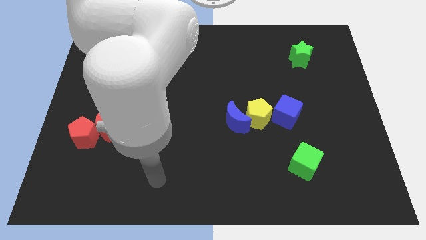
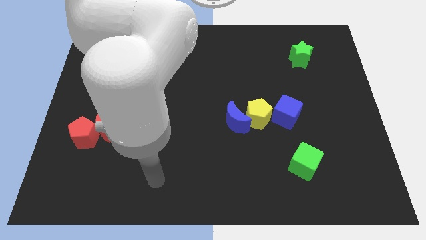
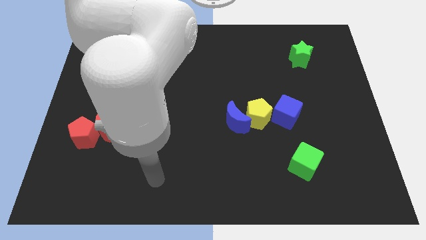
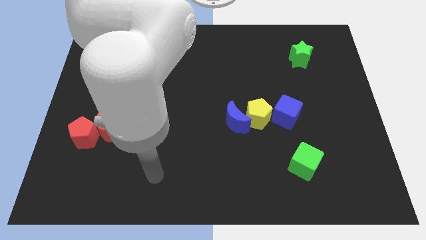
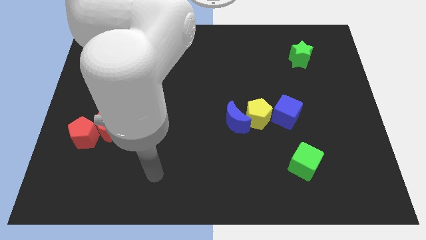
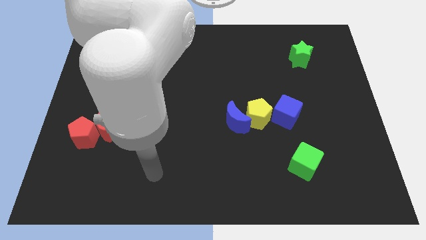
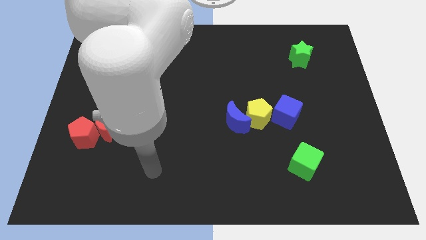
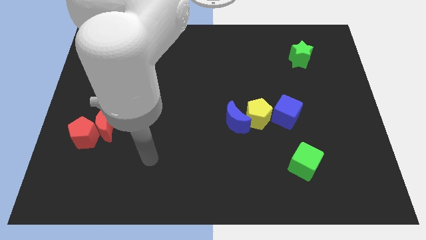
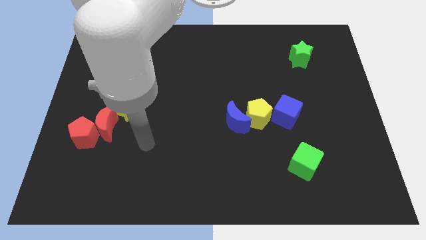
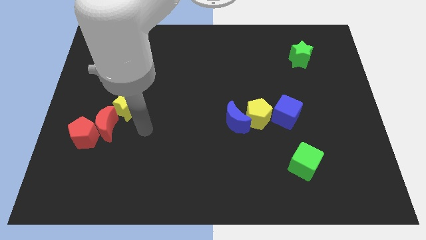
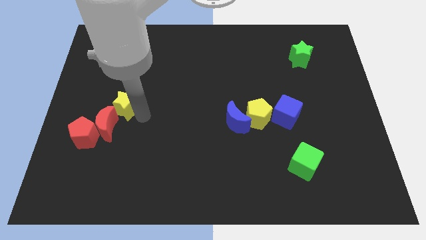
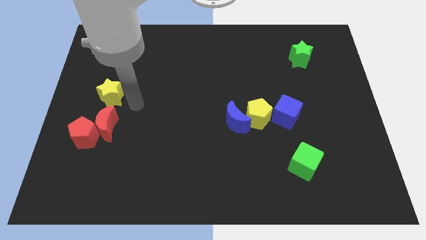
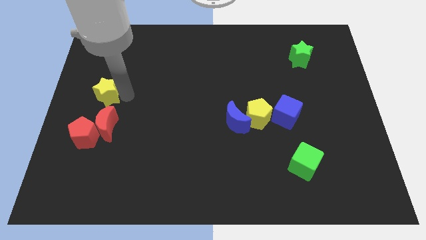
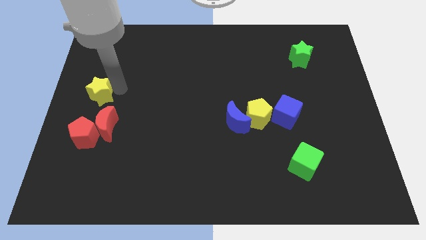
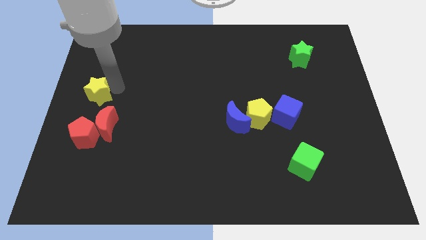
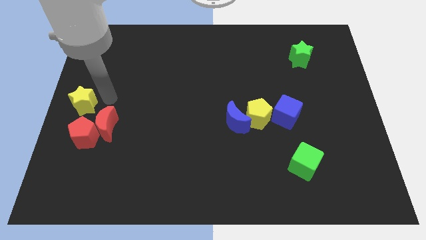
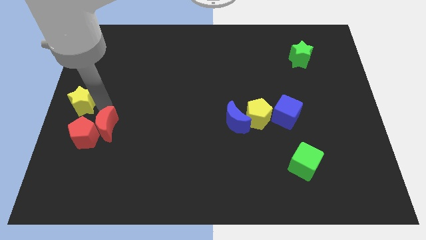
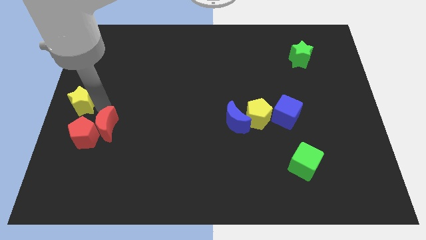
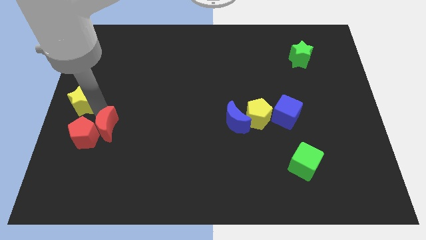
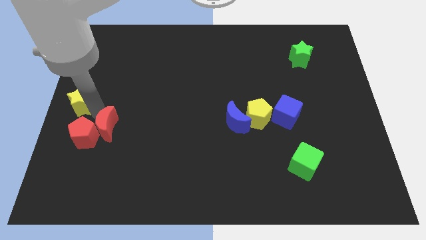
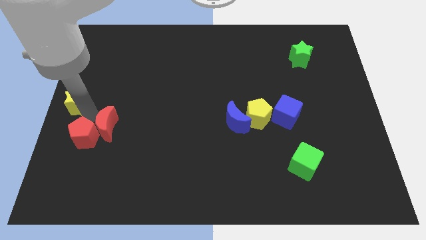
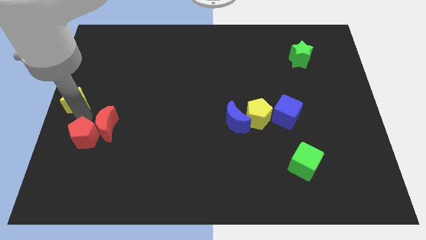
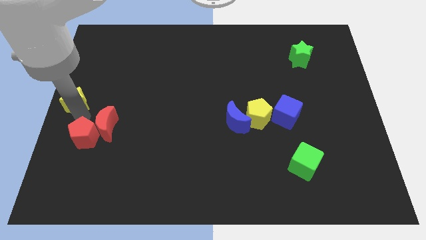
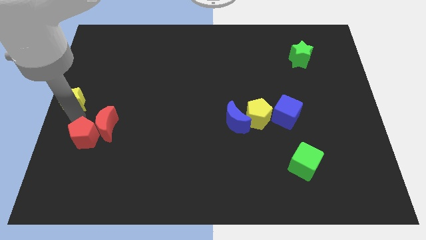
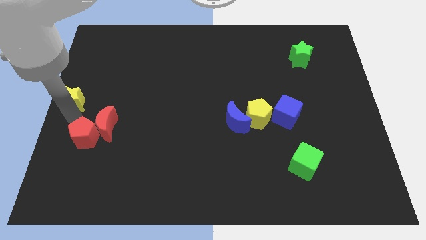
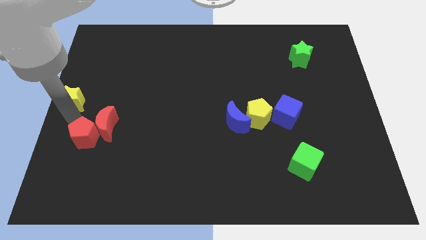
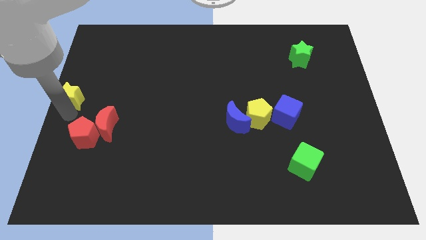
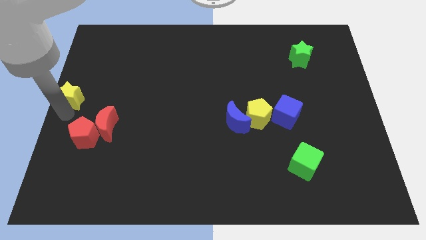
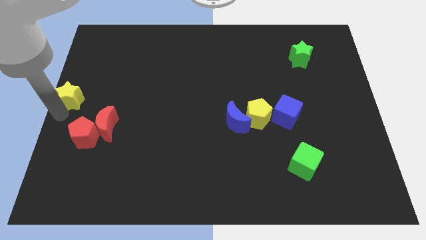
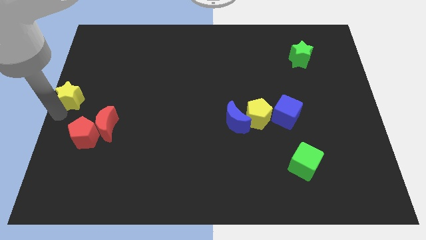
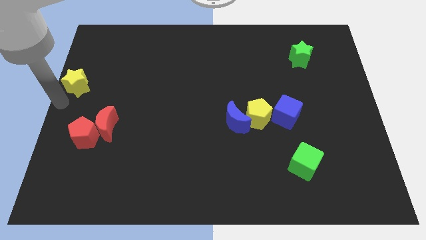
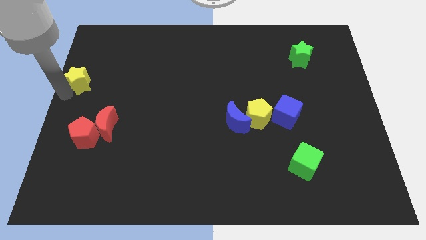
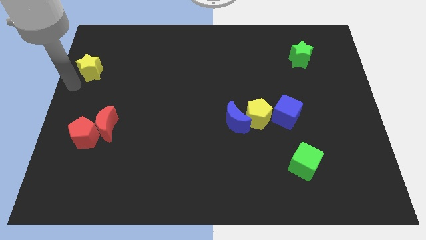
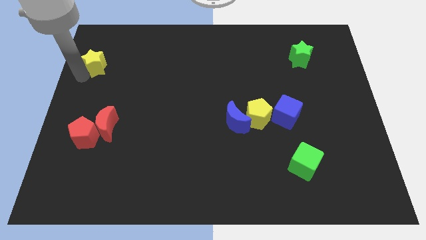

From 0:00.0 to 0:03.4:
place the yellow star above the red pentagon

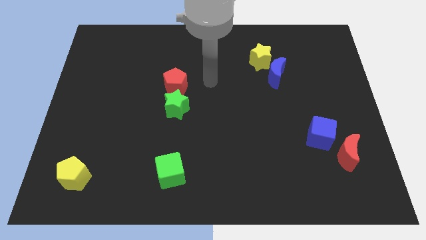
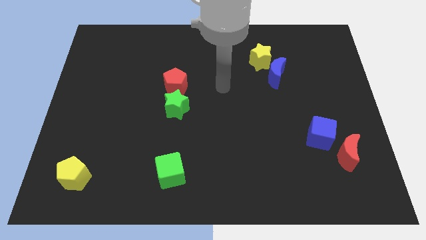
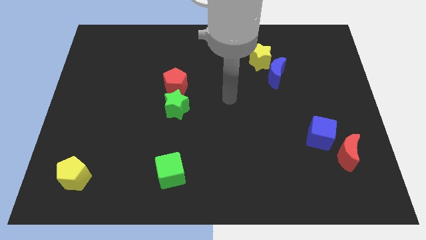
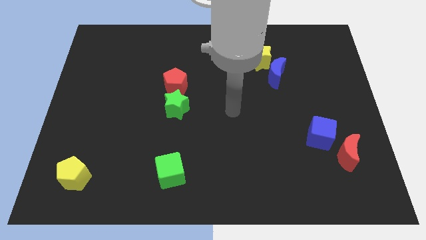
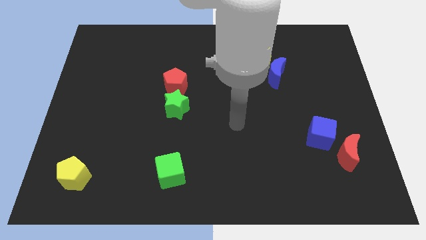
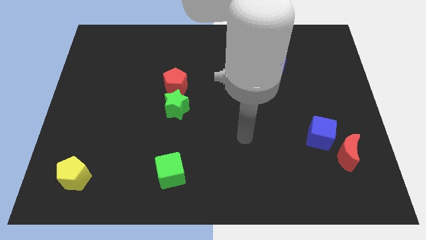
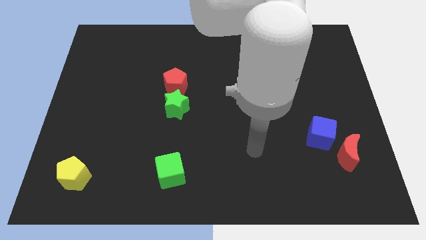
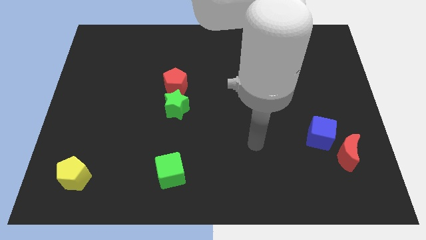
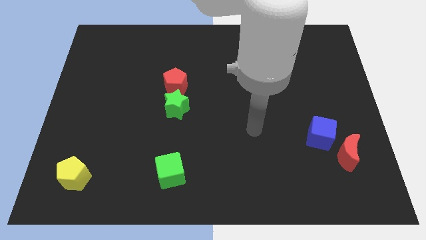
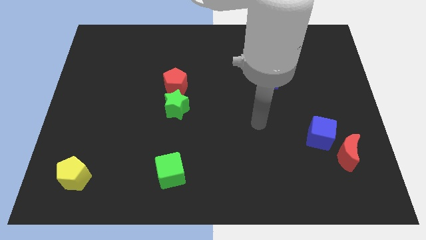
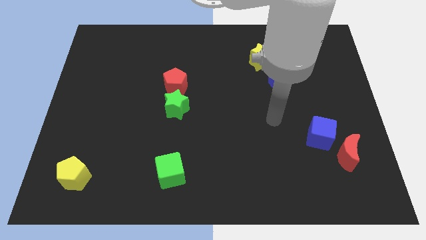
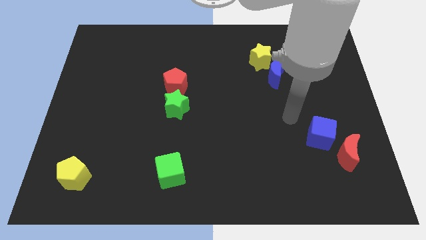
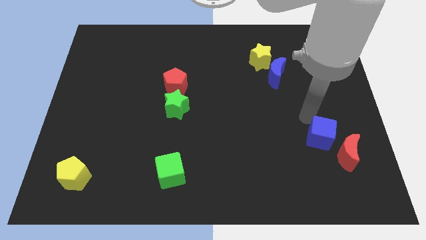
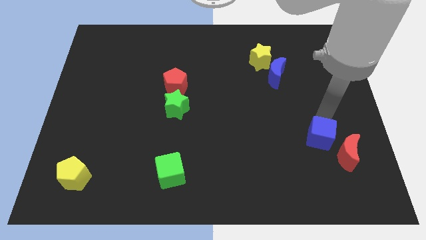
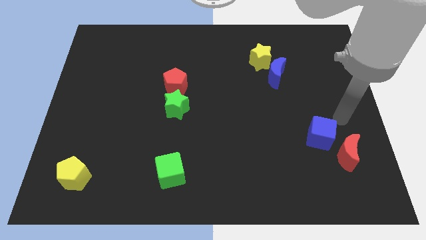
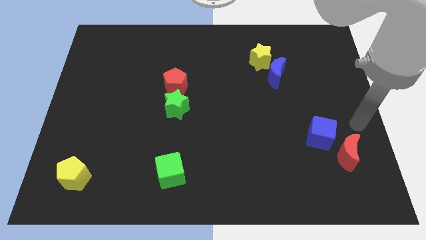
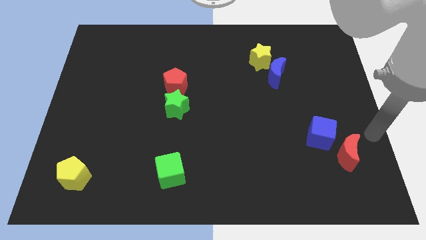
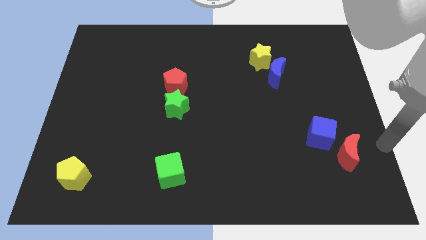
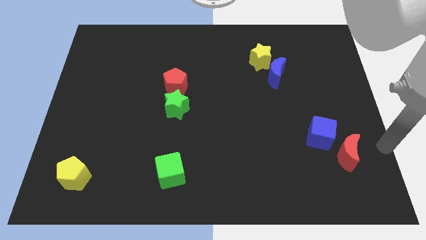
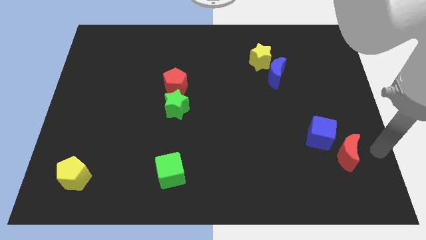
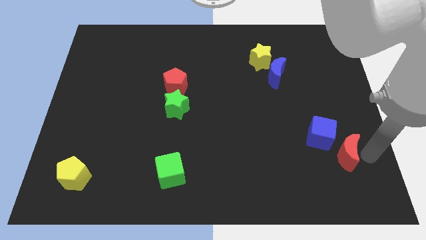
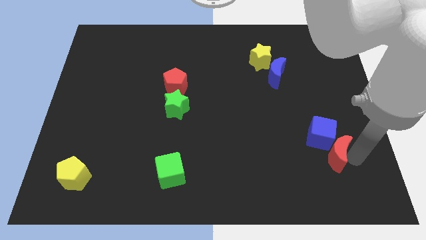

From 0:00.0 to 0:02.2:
move your arm and point to the right of red moon

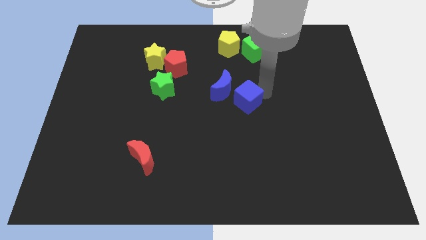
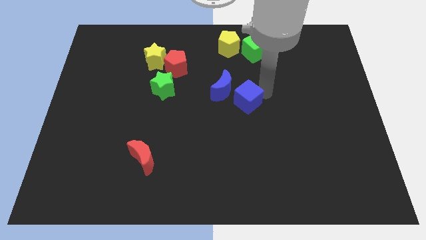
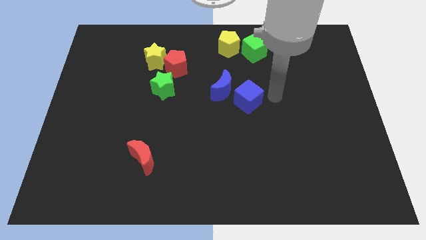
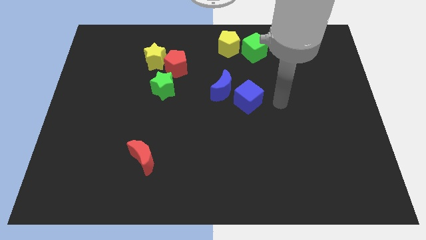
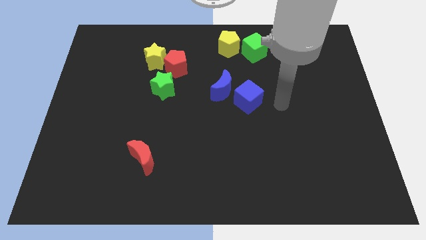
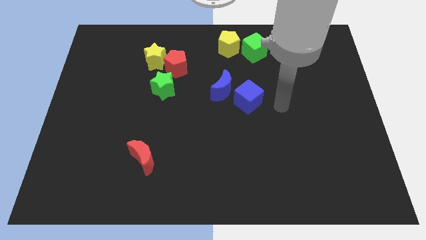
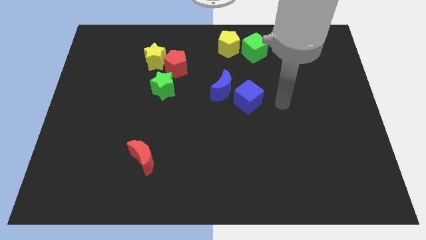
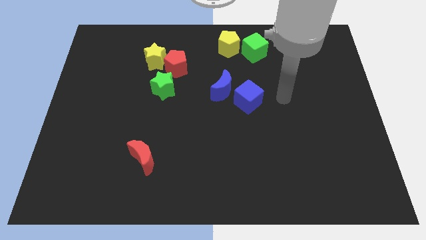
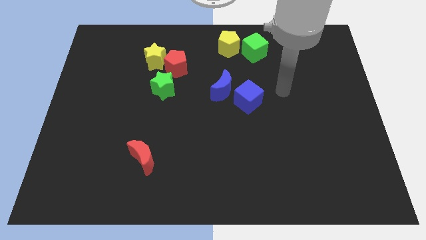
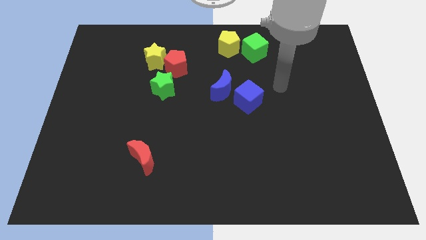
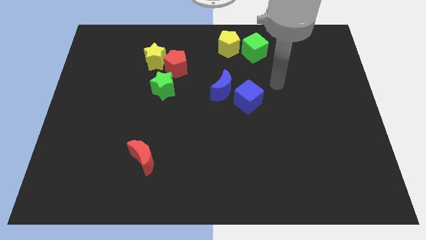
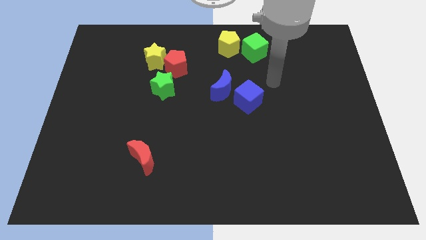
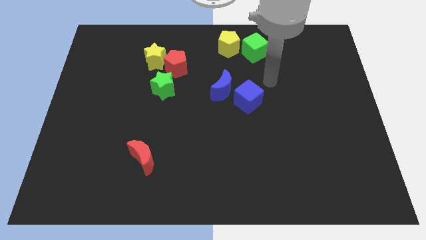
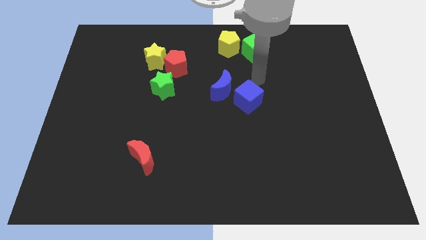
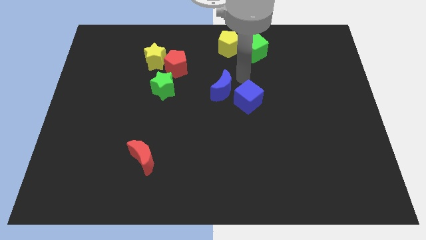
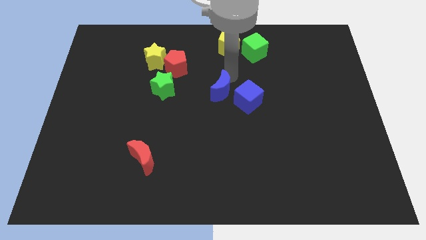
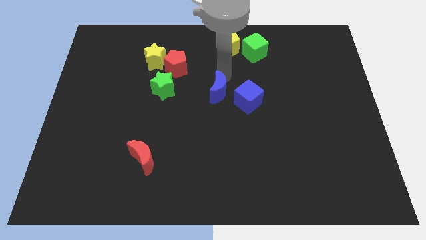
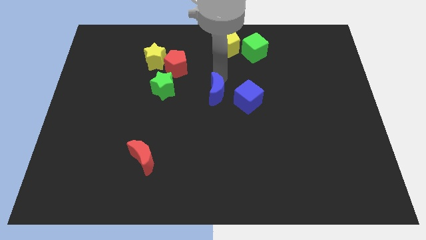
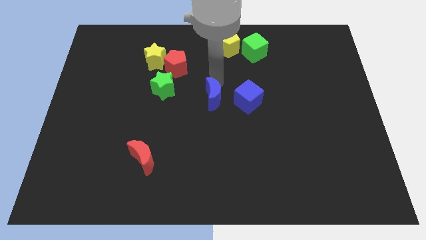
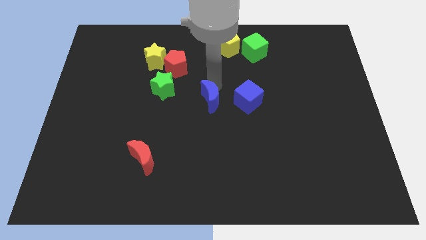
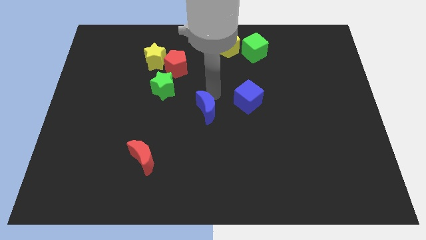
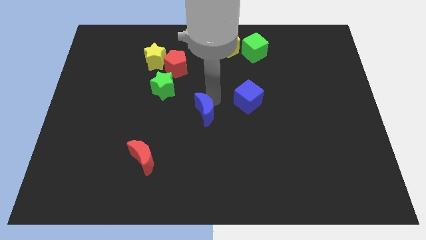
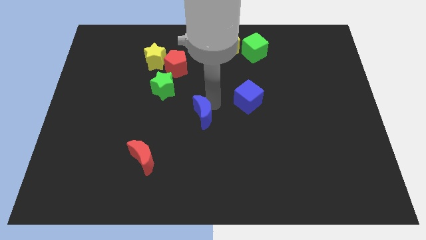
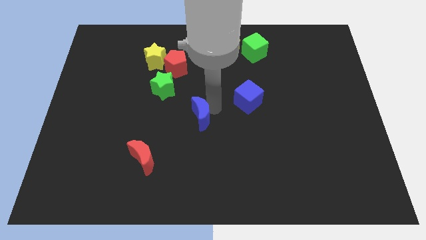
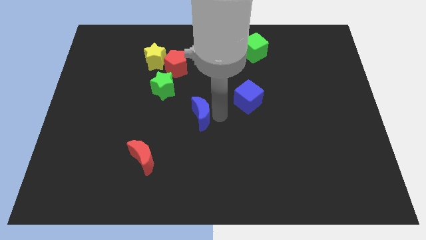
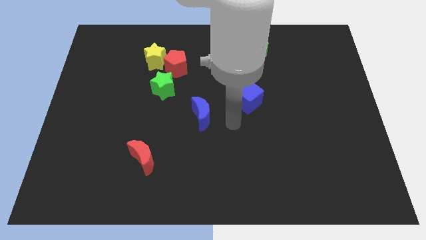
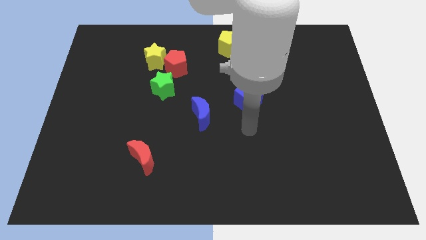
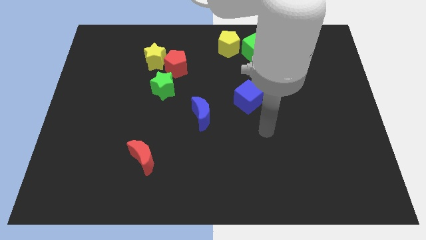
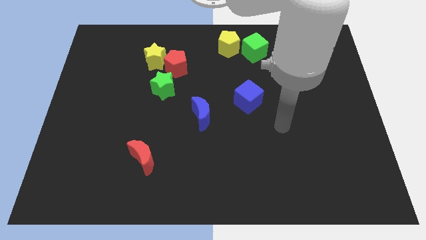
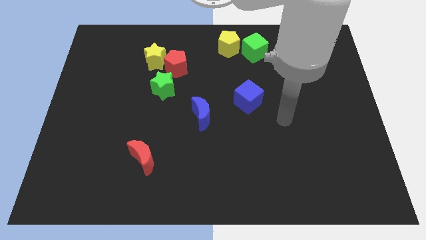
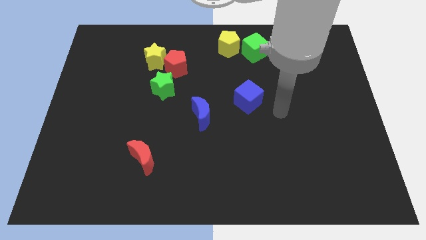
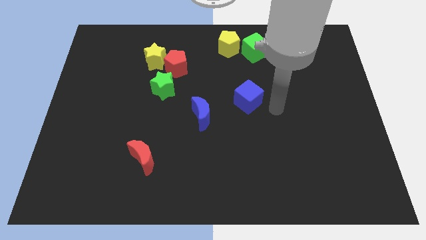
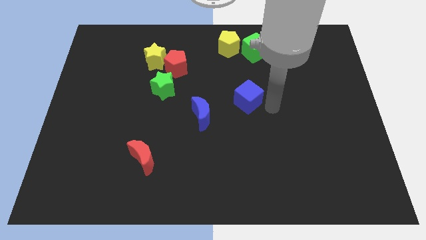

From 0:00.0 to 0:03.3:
move the blue crescent to the bottom left of the blue cube

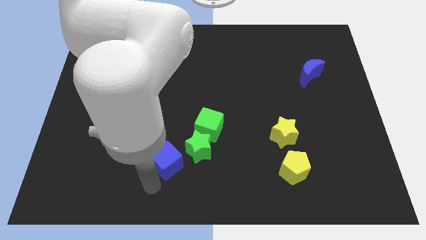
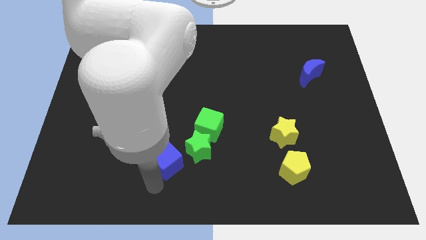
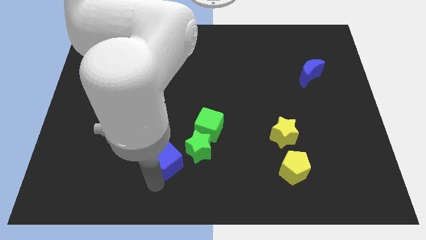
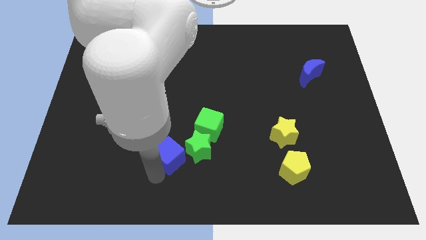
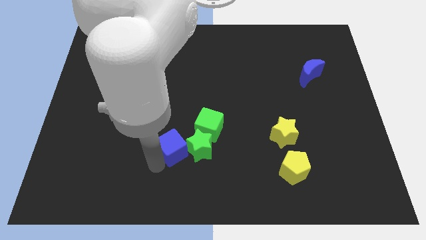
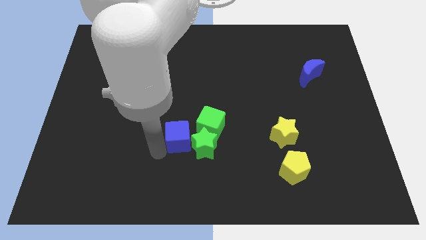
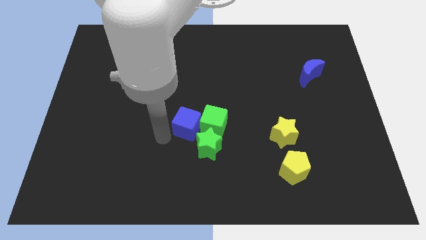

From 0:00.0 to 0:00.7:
place the blue cube left to the green star
